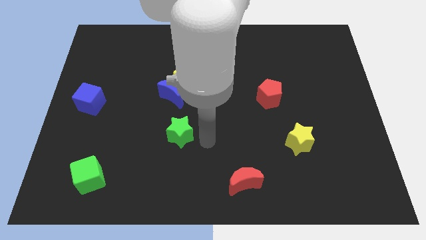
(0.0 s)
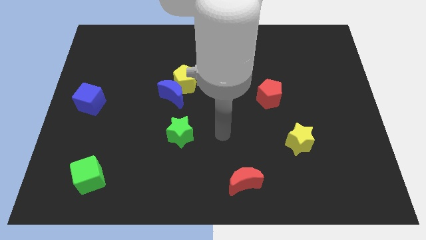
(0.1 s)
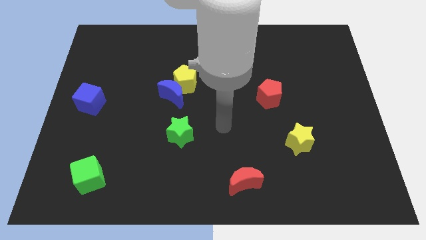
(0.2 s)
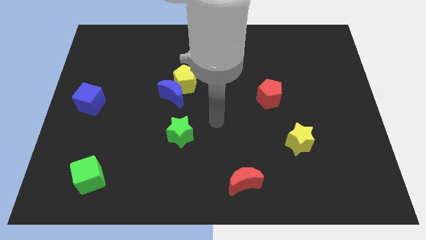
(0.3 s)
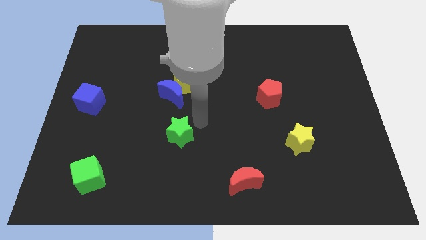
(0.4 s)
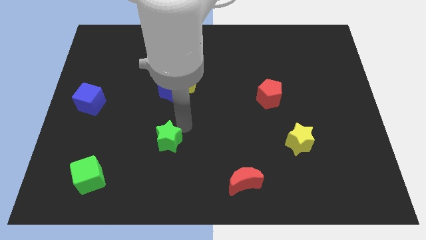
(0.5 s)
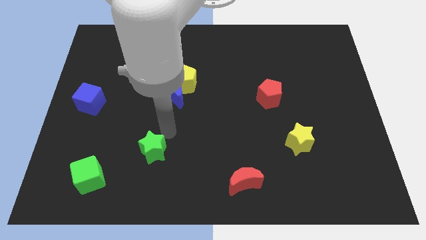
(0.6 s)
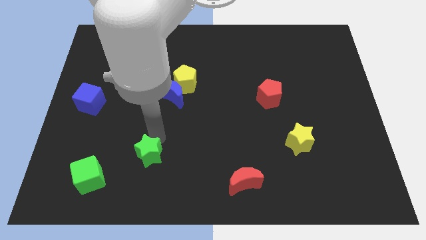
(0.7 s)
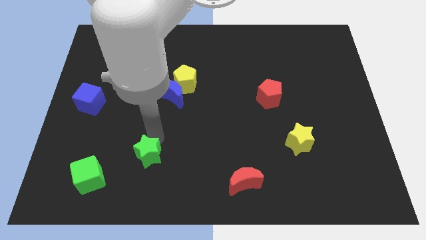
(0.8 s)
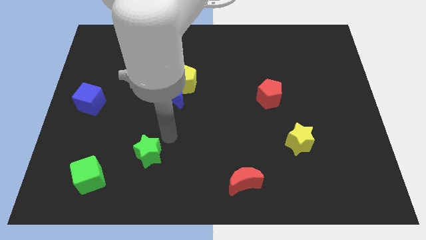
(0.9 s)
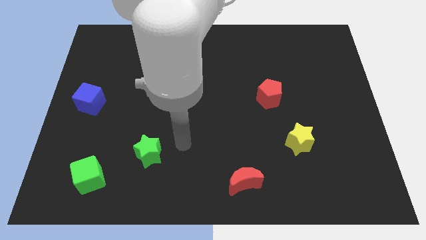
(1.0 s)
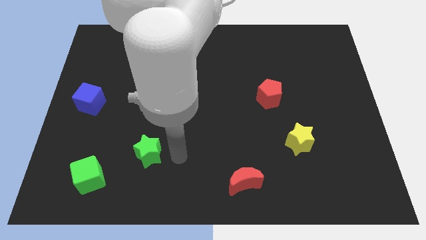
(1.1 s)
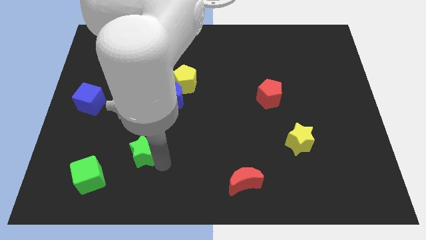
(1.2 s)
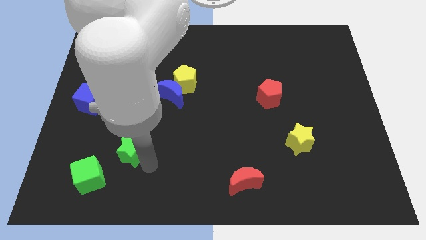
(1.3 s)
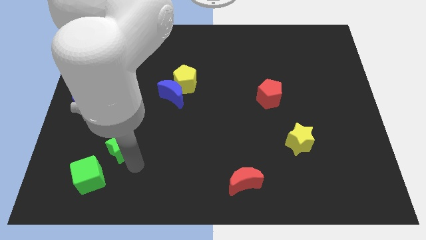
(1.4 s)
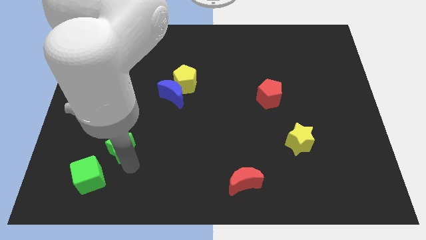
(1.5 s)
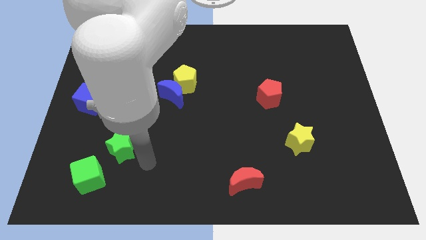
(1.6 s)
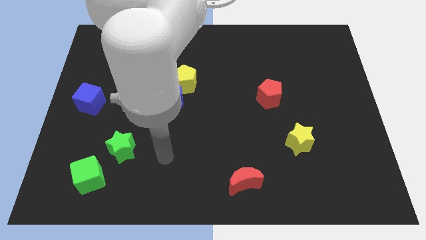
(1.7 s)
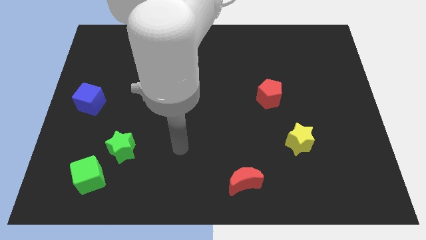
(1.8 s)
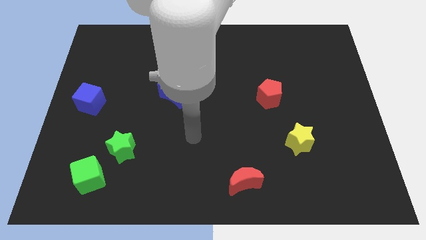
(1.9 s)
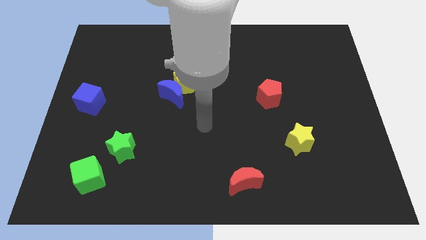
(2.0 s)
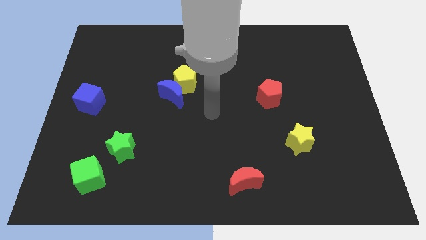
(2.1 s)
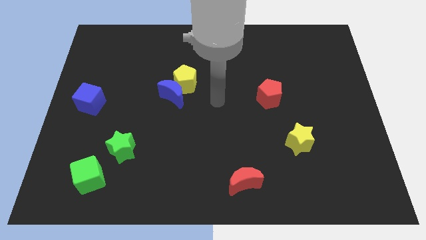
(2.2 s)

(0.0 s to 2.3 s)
place the green star near to the green cube

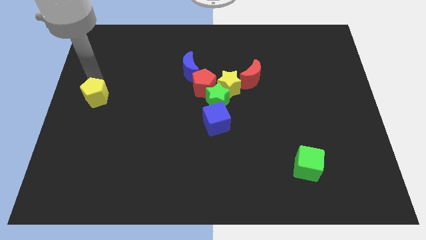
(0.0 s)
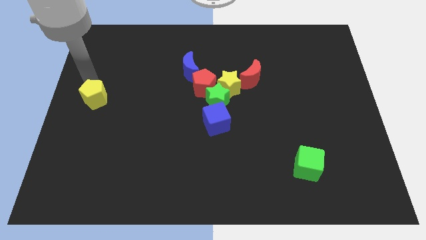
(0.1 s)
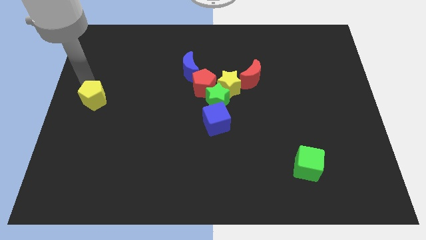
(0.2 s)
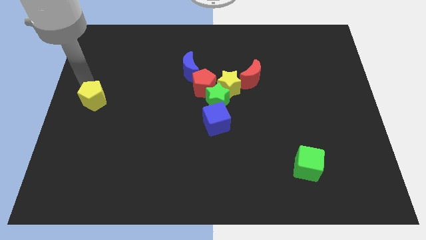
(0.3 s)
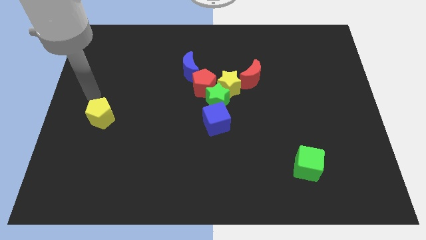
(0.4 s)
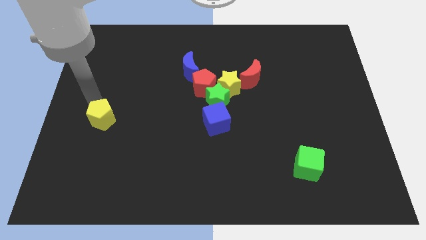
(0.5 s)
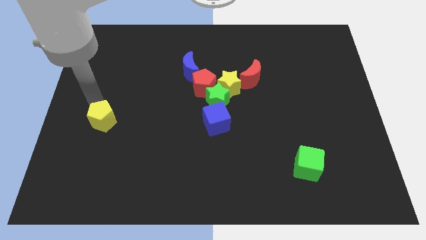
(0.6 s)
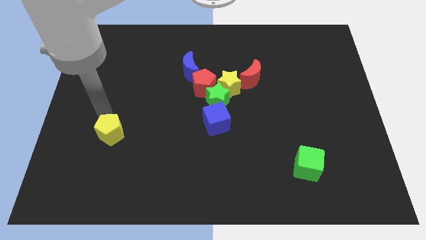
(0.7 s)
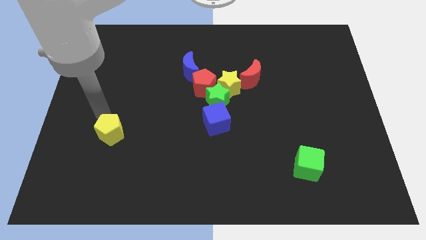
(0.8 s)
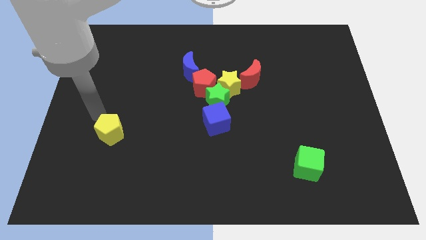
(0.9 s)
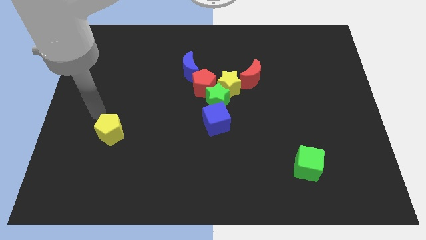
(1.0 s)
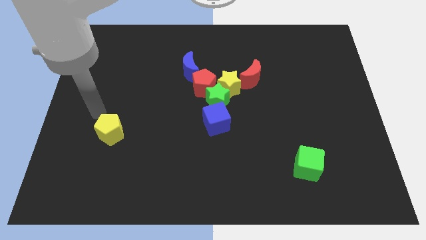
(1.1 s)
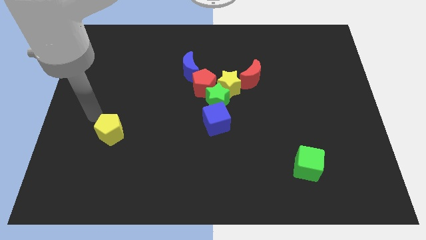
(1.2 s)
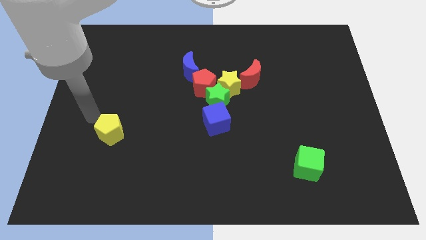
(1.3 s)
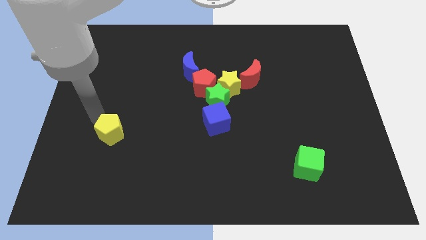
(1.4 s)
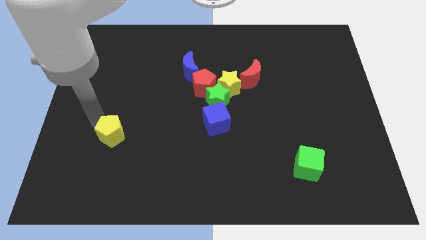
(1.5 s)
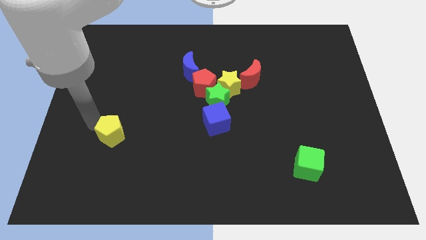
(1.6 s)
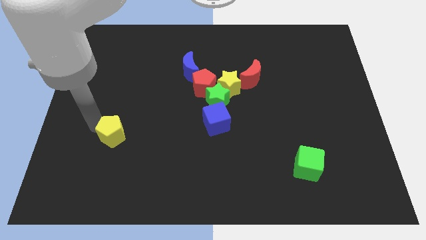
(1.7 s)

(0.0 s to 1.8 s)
slightly push the yellow pentagon towards the bottom left

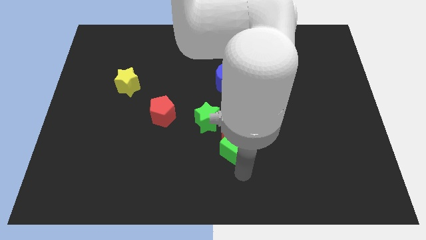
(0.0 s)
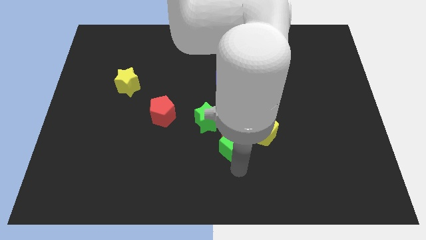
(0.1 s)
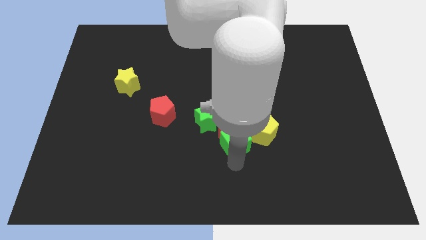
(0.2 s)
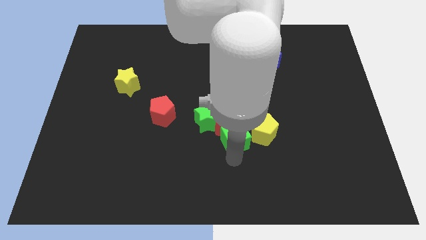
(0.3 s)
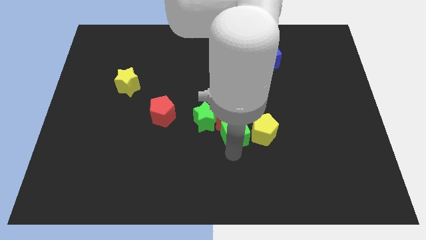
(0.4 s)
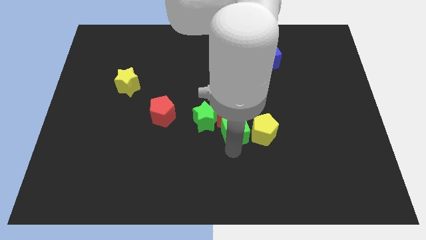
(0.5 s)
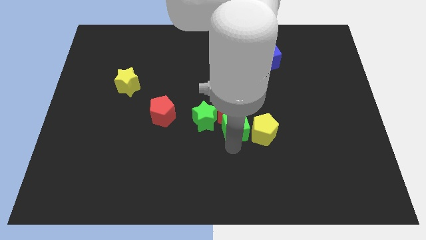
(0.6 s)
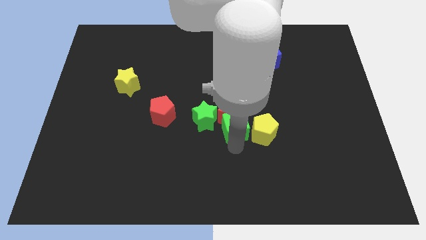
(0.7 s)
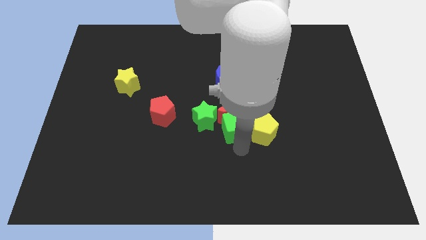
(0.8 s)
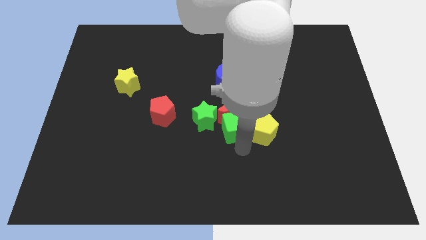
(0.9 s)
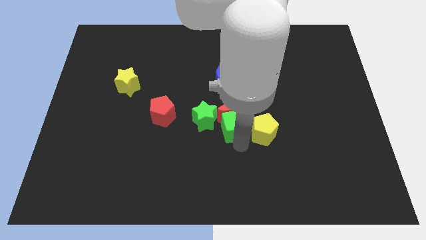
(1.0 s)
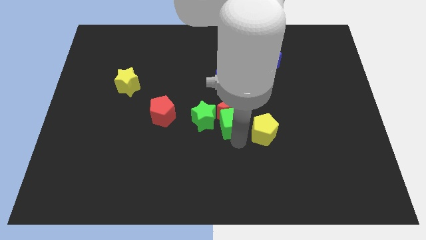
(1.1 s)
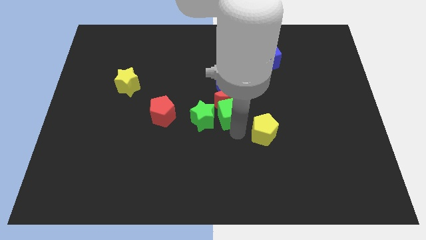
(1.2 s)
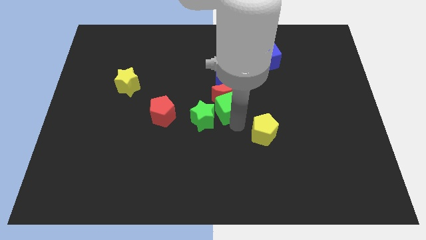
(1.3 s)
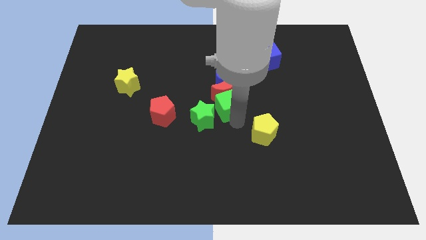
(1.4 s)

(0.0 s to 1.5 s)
push the green cube towards the red moon

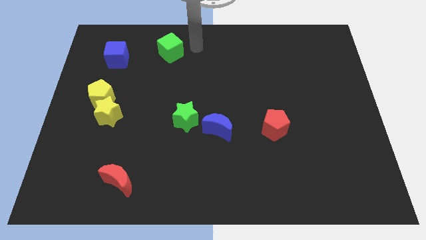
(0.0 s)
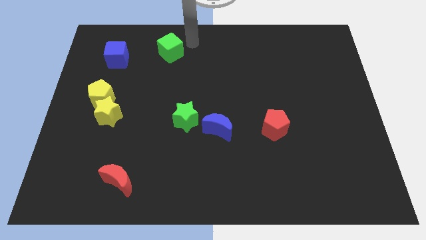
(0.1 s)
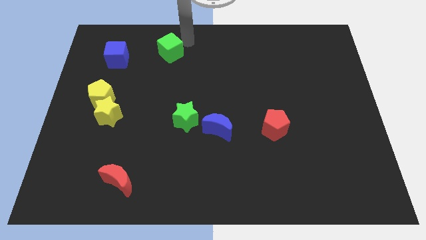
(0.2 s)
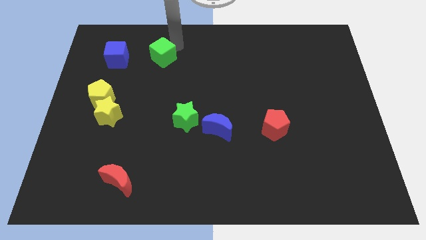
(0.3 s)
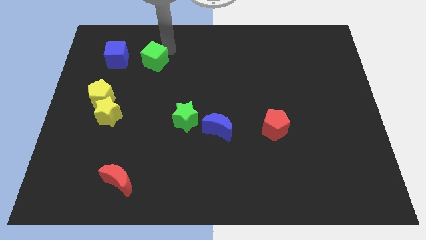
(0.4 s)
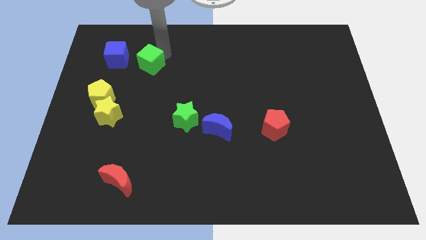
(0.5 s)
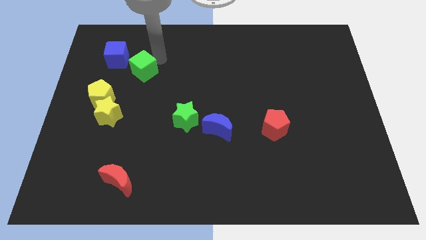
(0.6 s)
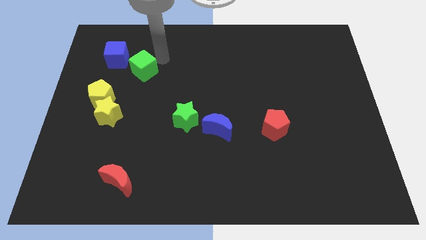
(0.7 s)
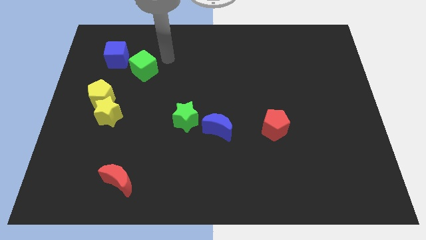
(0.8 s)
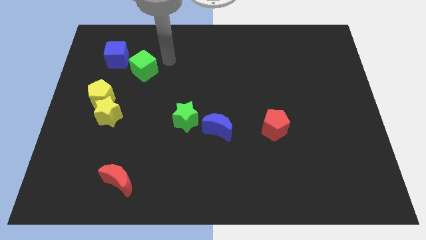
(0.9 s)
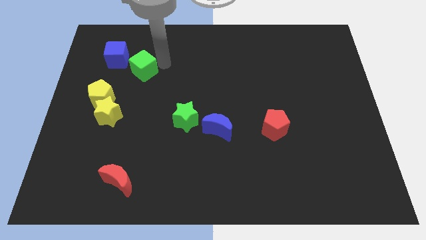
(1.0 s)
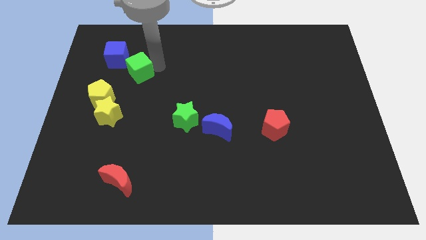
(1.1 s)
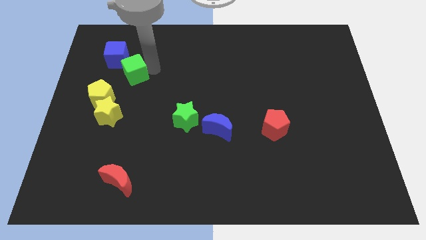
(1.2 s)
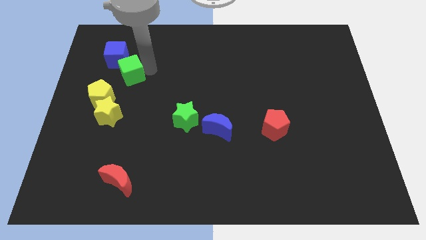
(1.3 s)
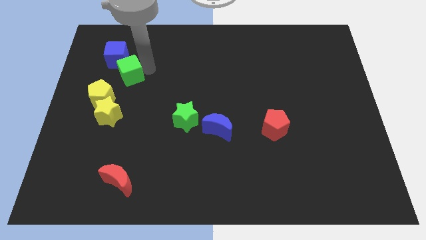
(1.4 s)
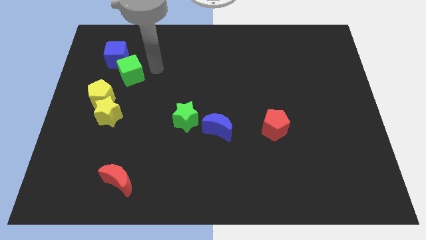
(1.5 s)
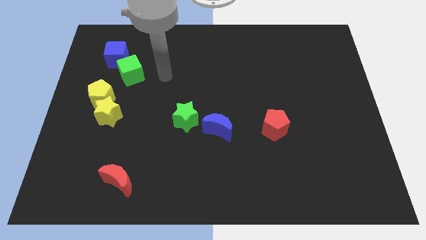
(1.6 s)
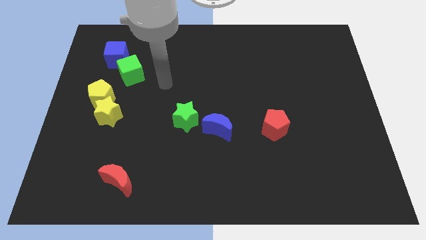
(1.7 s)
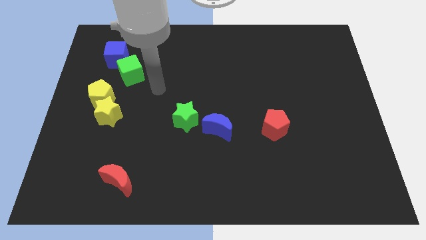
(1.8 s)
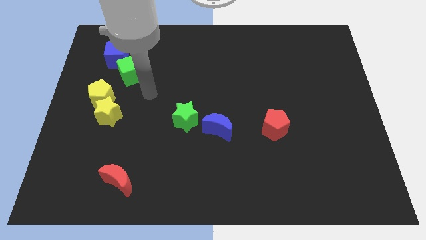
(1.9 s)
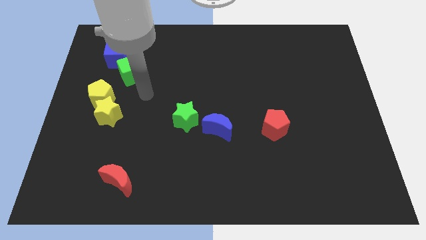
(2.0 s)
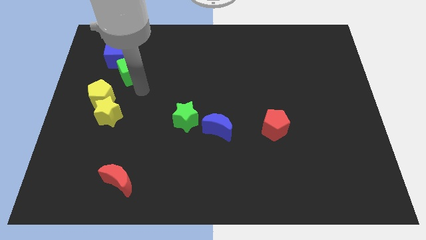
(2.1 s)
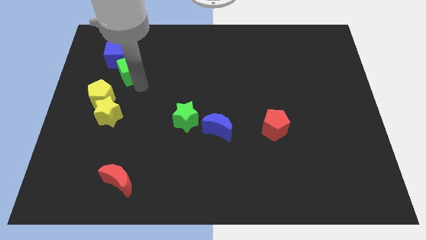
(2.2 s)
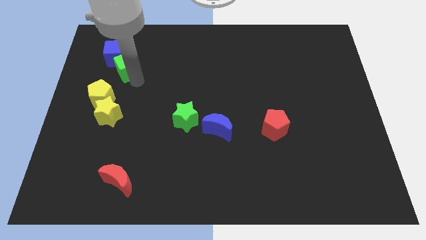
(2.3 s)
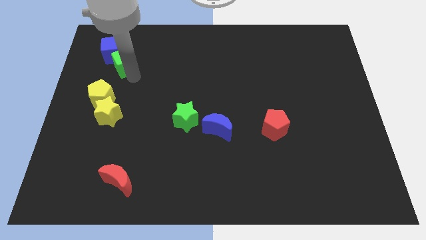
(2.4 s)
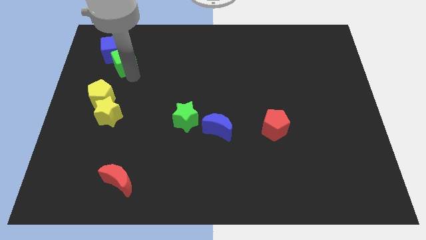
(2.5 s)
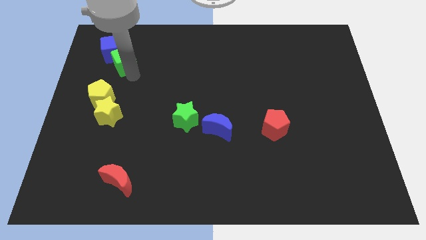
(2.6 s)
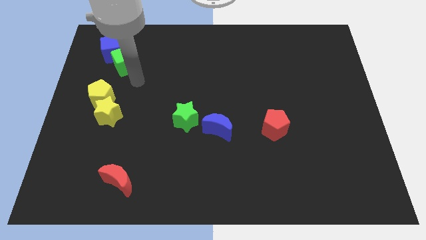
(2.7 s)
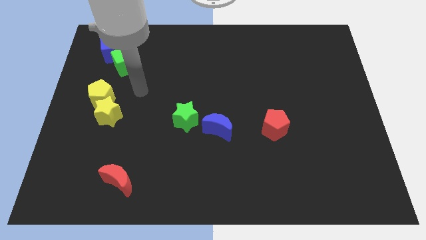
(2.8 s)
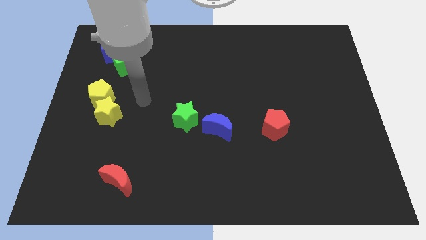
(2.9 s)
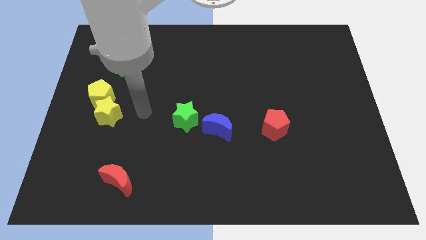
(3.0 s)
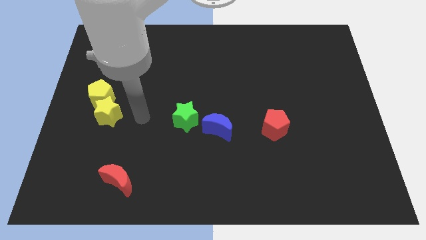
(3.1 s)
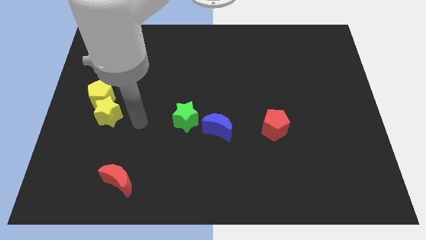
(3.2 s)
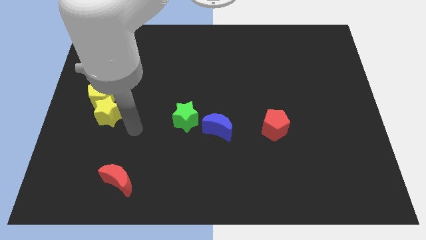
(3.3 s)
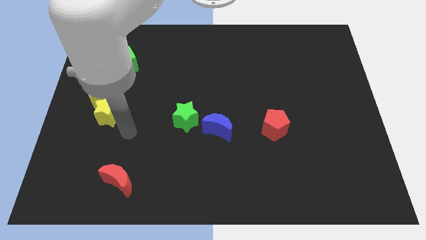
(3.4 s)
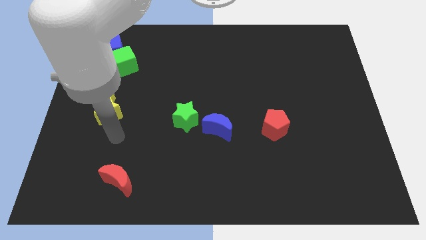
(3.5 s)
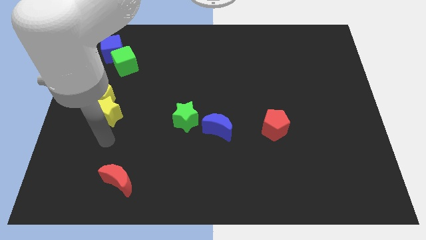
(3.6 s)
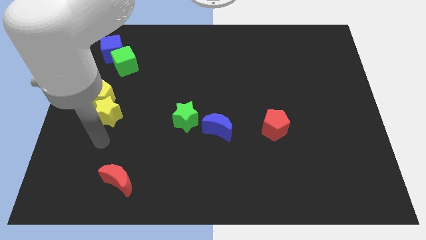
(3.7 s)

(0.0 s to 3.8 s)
slightly push the green cube with blue cube to the top left
